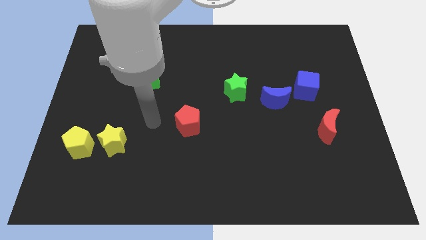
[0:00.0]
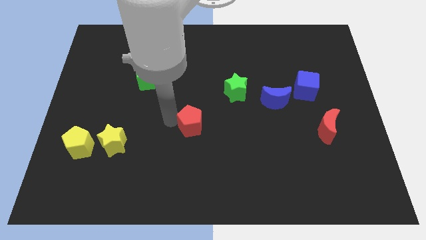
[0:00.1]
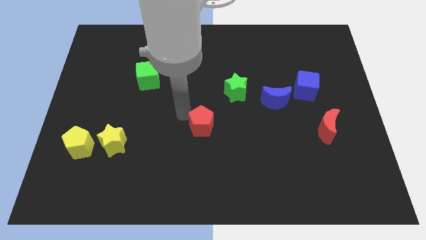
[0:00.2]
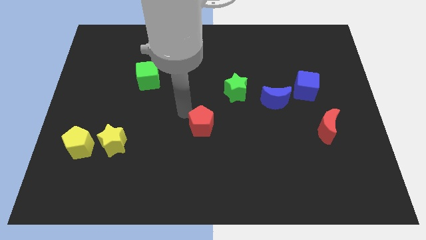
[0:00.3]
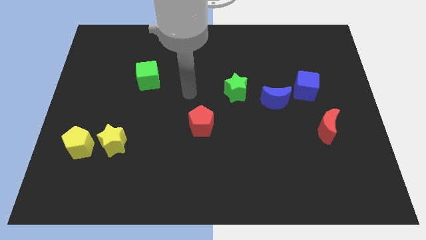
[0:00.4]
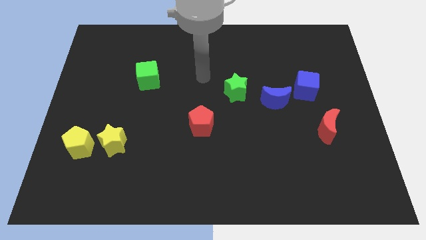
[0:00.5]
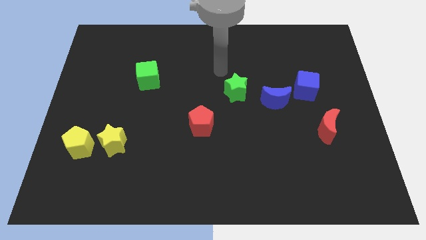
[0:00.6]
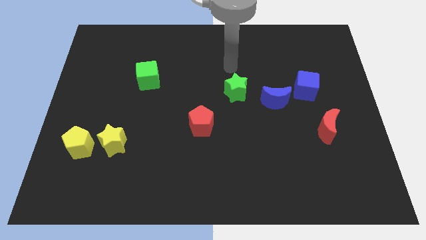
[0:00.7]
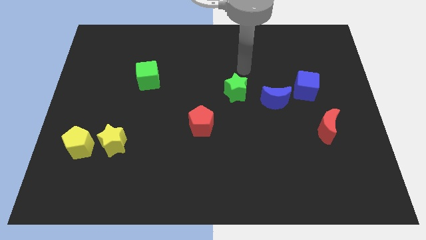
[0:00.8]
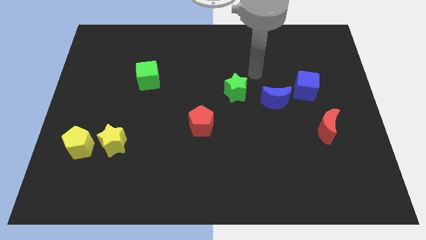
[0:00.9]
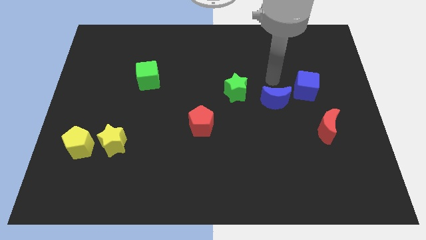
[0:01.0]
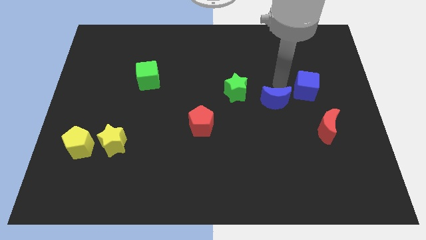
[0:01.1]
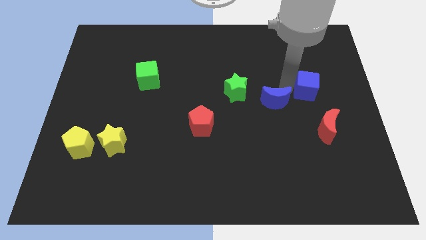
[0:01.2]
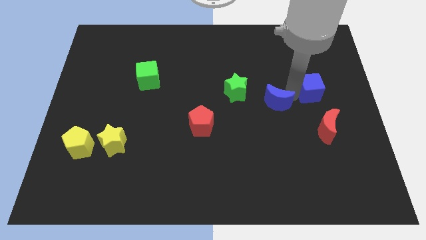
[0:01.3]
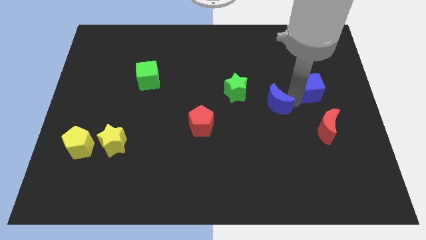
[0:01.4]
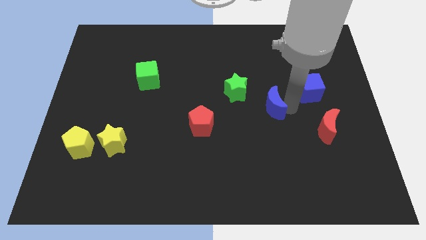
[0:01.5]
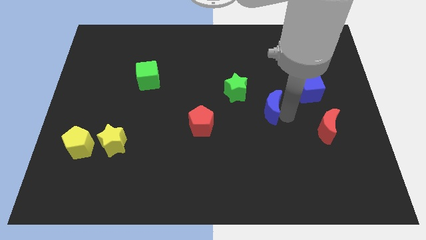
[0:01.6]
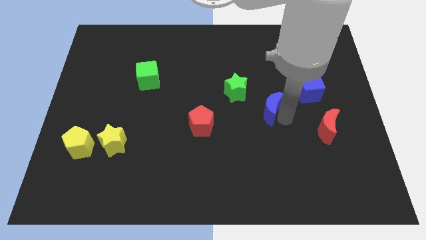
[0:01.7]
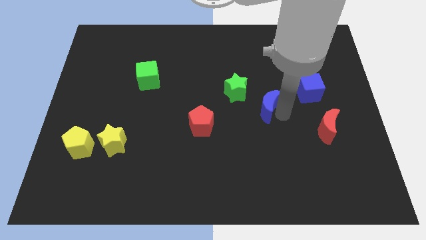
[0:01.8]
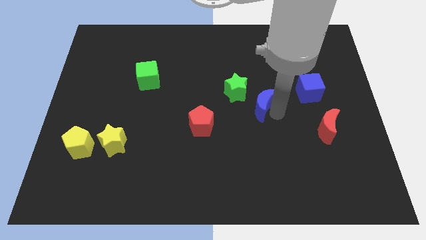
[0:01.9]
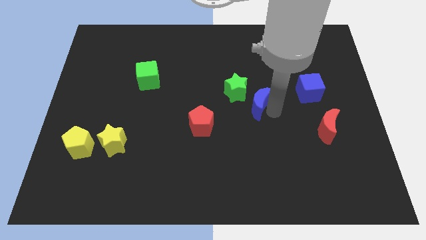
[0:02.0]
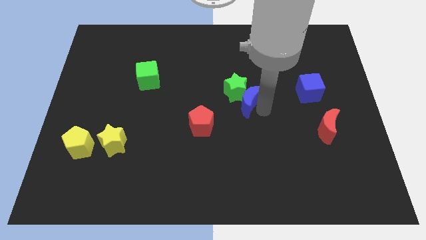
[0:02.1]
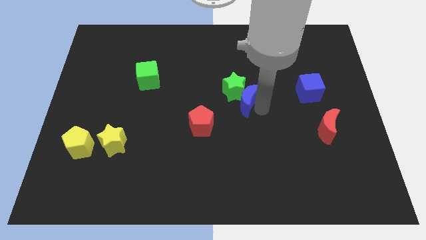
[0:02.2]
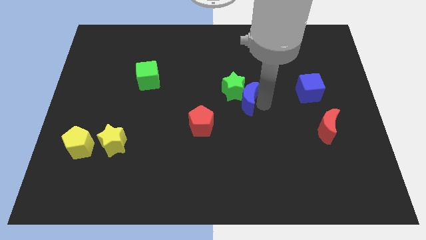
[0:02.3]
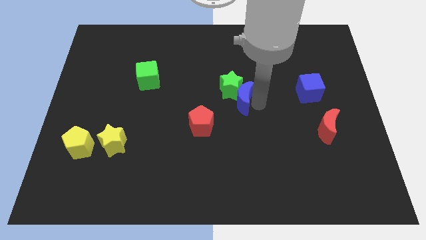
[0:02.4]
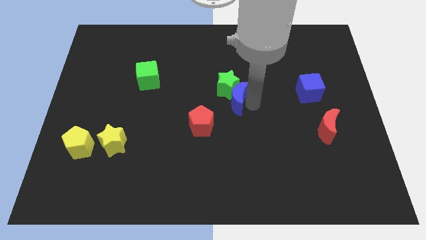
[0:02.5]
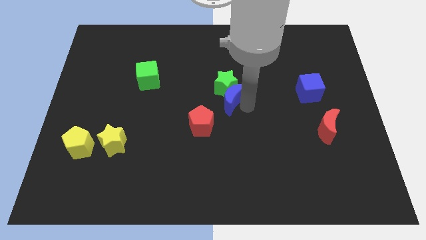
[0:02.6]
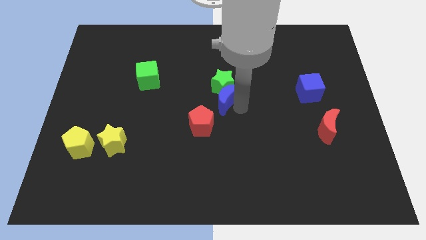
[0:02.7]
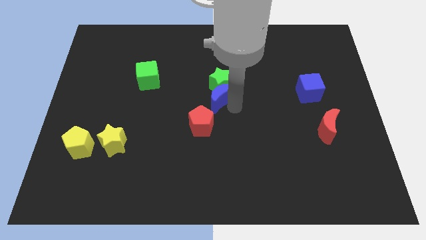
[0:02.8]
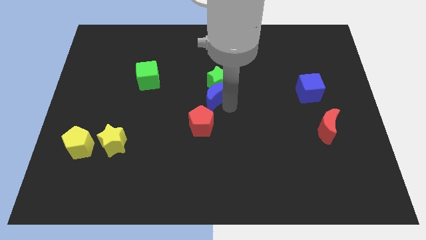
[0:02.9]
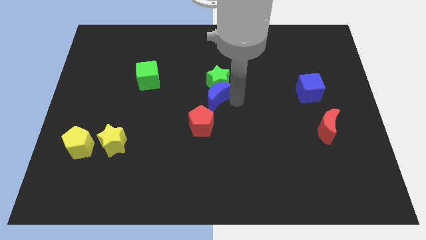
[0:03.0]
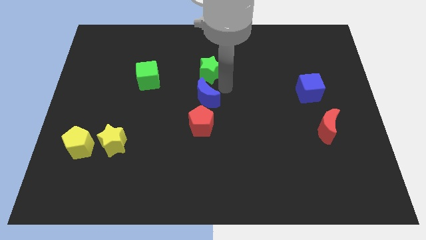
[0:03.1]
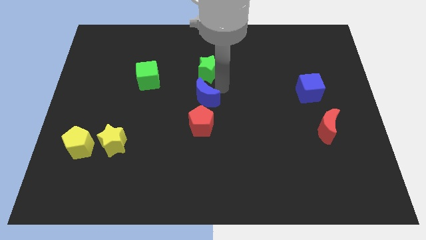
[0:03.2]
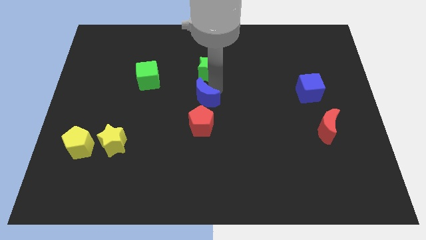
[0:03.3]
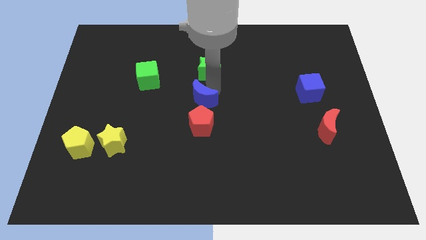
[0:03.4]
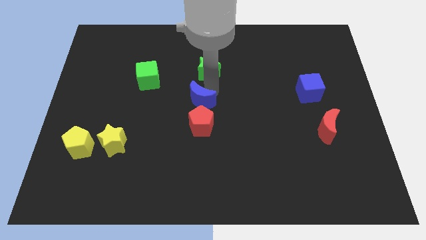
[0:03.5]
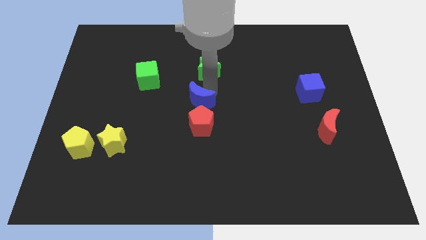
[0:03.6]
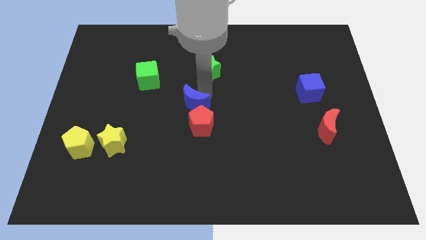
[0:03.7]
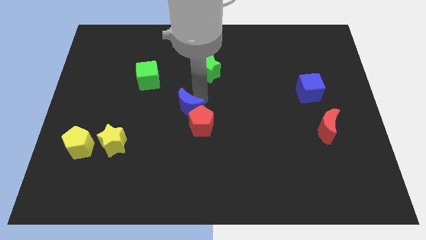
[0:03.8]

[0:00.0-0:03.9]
put the blue moon close to the red pentagon

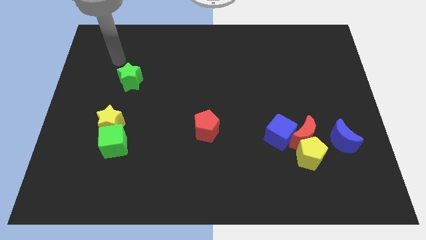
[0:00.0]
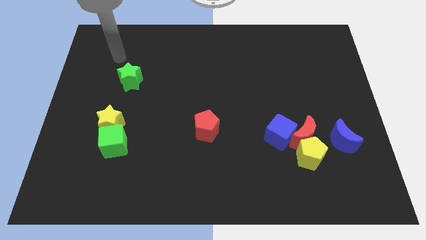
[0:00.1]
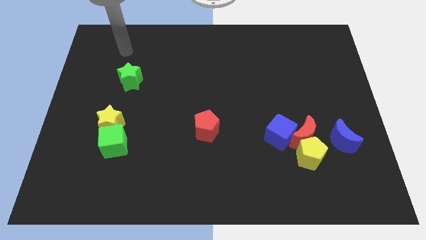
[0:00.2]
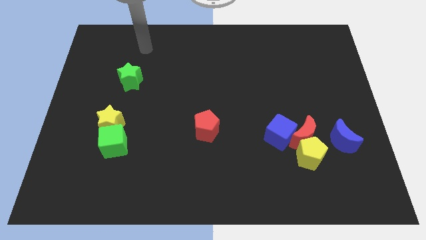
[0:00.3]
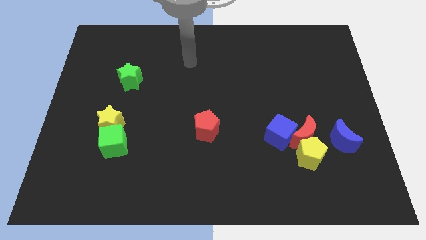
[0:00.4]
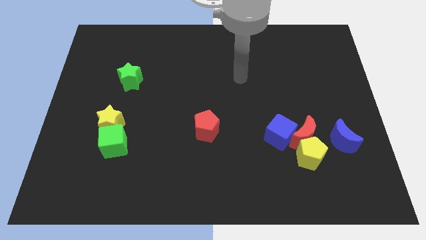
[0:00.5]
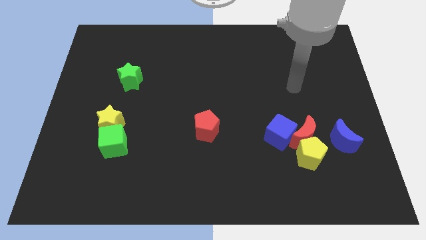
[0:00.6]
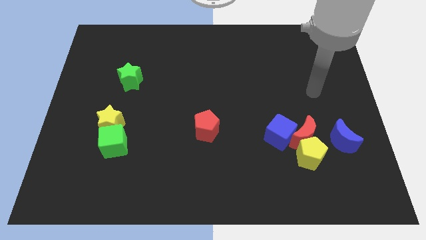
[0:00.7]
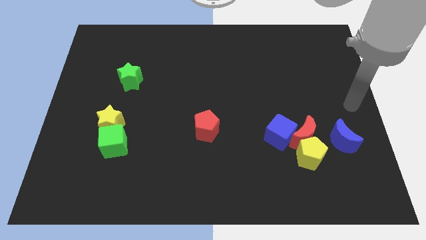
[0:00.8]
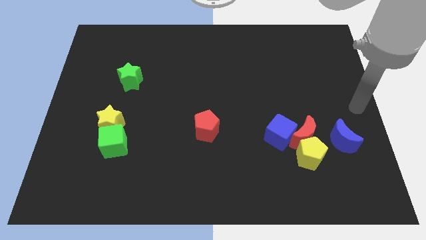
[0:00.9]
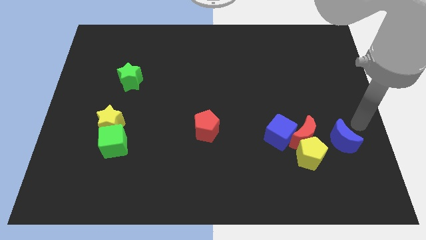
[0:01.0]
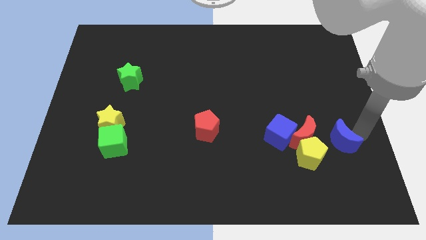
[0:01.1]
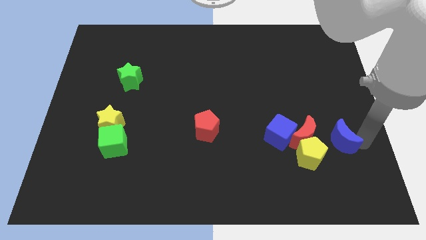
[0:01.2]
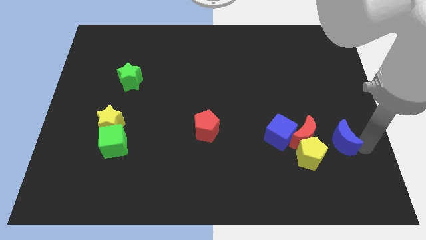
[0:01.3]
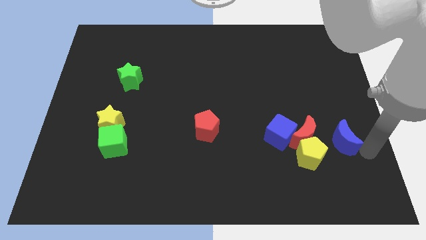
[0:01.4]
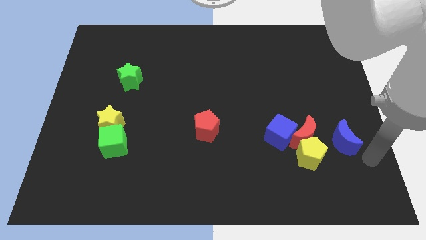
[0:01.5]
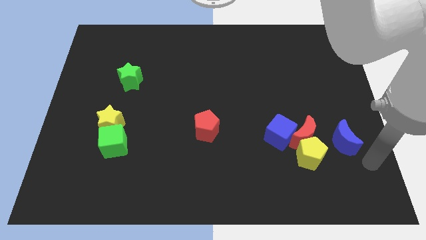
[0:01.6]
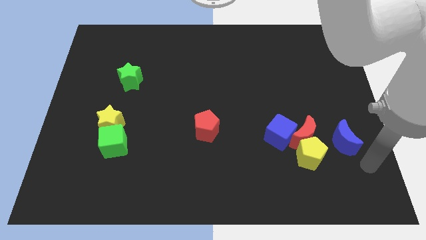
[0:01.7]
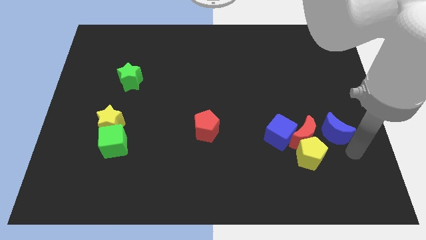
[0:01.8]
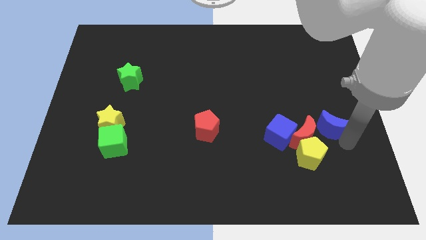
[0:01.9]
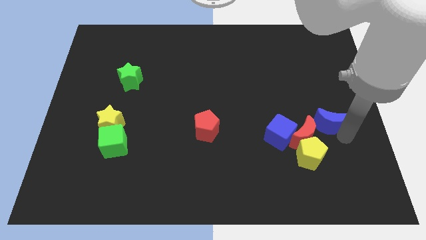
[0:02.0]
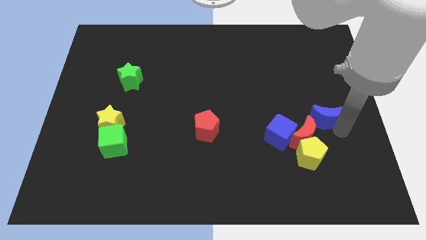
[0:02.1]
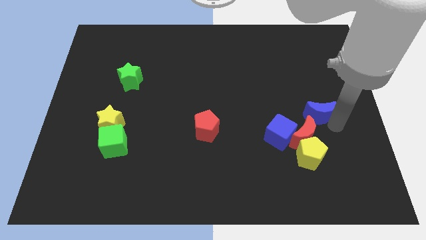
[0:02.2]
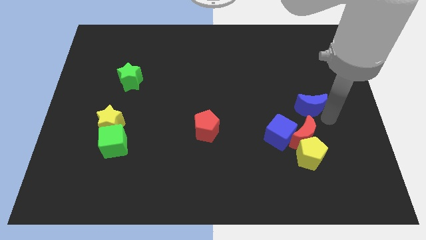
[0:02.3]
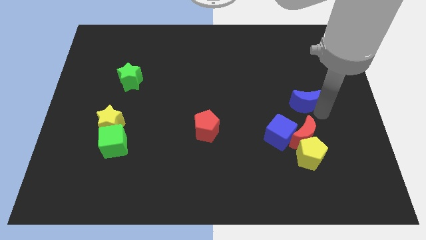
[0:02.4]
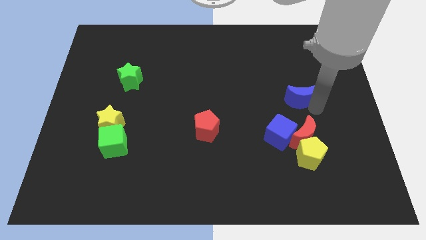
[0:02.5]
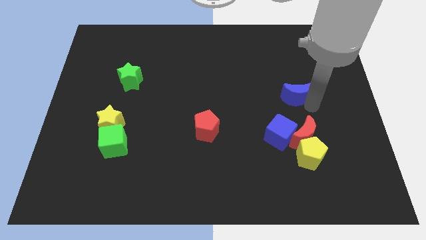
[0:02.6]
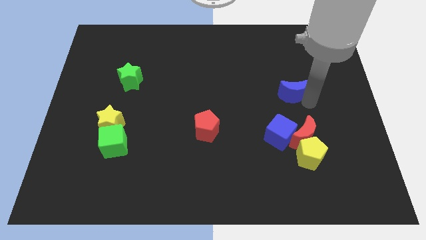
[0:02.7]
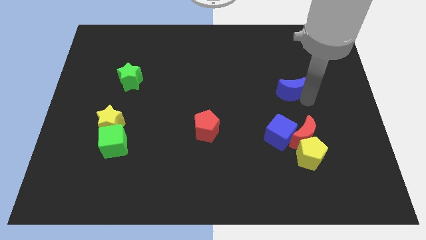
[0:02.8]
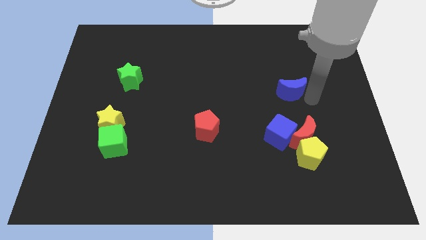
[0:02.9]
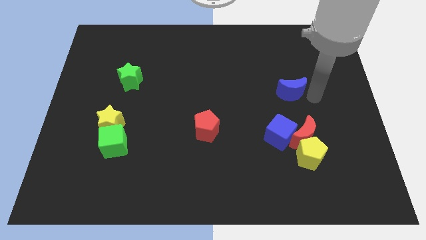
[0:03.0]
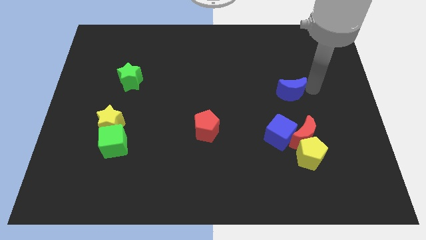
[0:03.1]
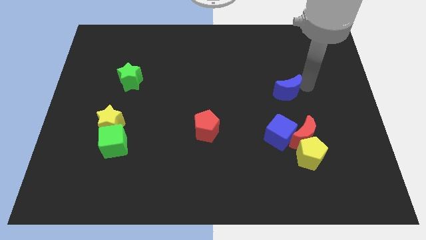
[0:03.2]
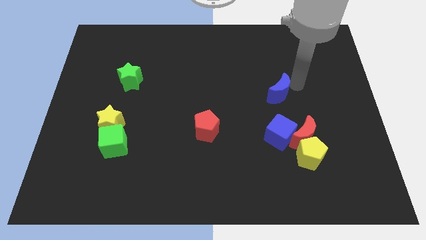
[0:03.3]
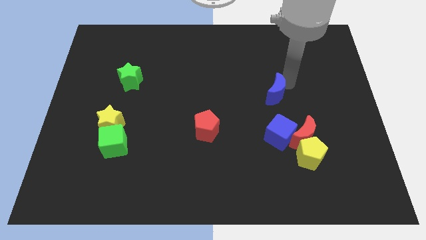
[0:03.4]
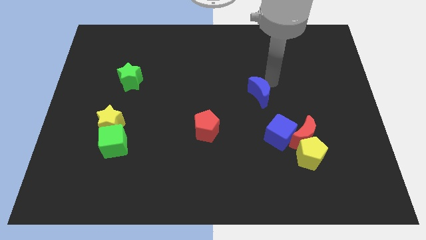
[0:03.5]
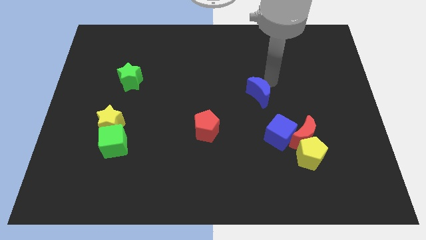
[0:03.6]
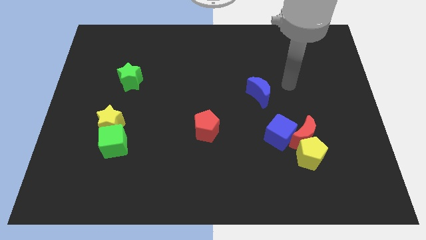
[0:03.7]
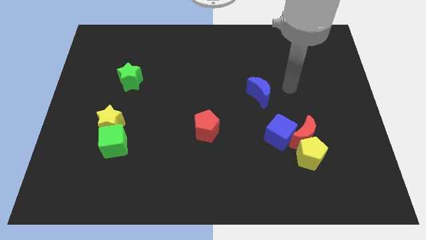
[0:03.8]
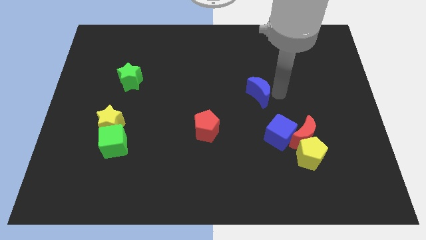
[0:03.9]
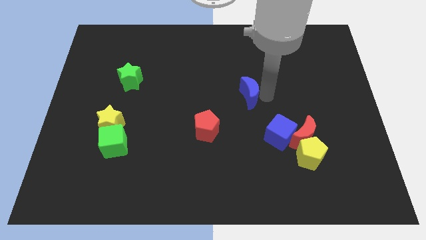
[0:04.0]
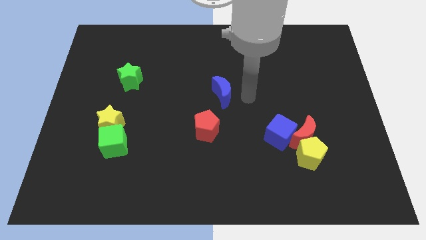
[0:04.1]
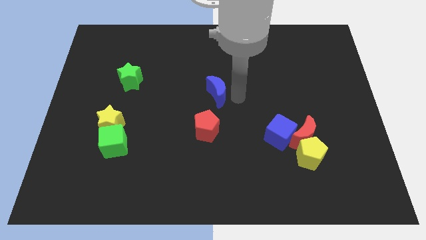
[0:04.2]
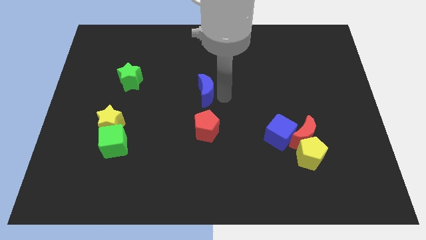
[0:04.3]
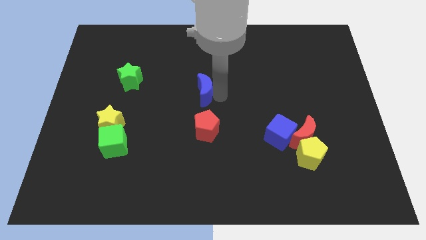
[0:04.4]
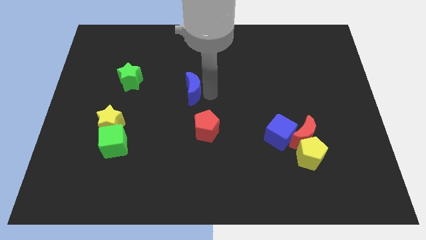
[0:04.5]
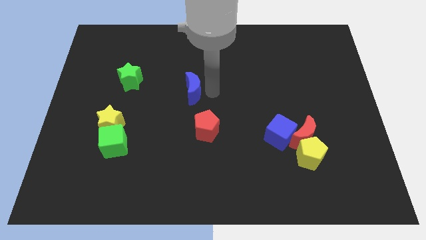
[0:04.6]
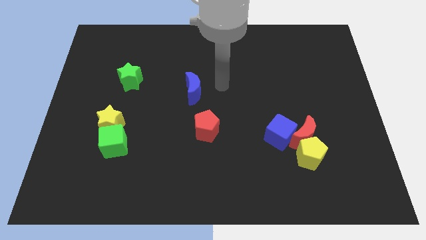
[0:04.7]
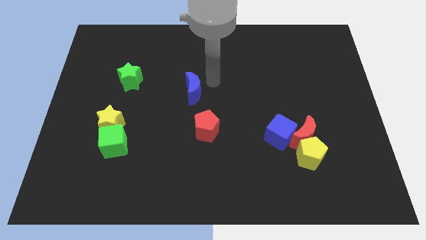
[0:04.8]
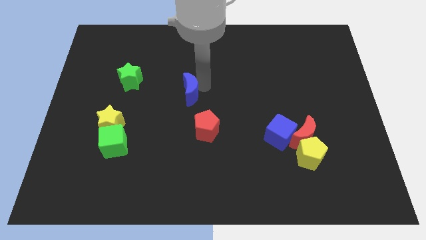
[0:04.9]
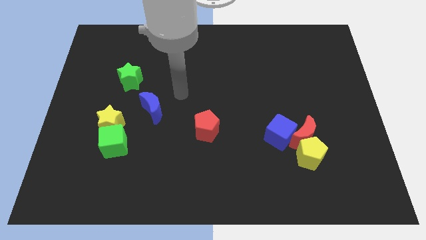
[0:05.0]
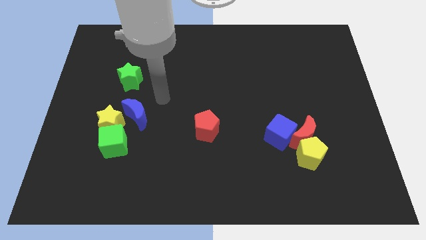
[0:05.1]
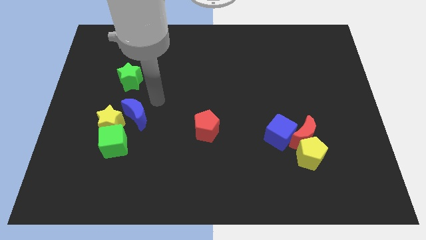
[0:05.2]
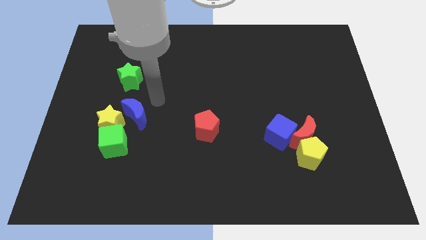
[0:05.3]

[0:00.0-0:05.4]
slide the blue moon close to the yellow star
